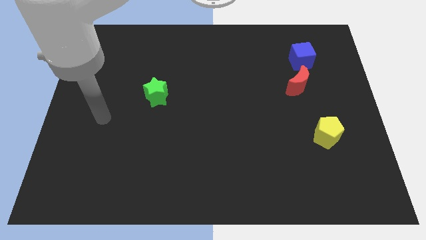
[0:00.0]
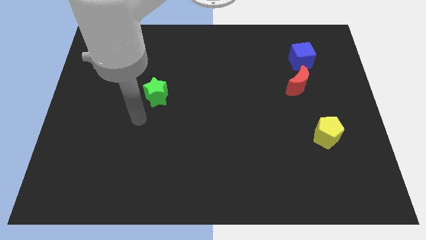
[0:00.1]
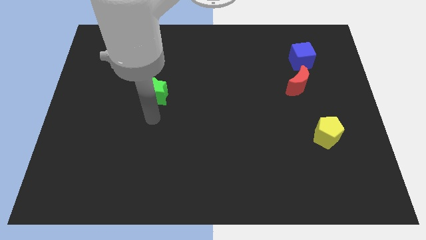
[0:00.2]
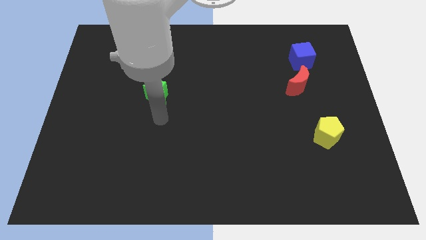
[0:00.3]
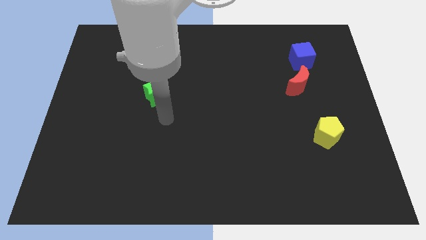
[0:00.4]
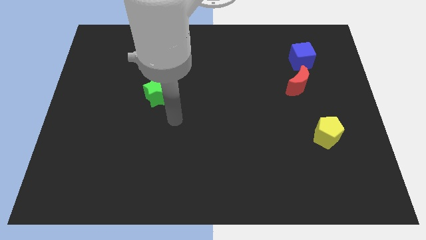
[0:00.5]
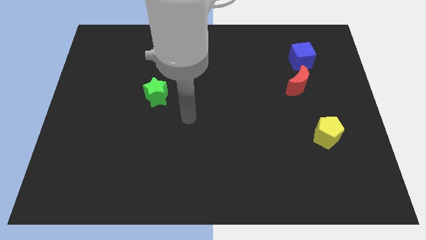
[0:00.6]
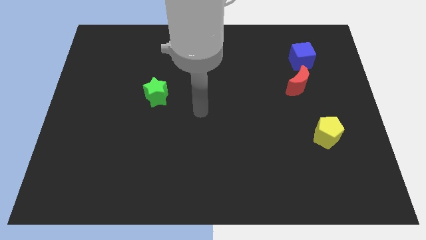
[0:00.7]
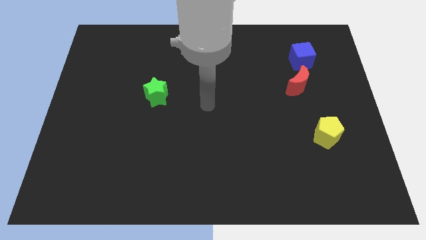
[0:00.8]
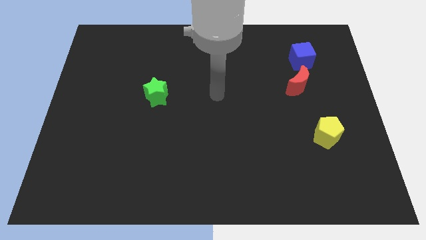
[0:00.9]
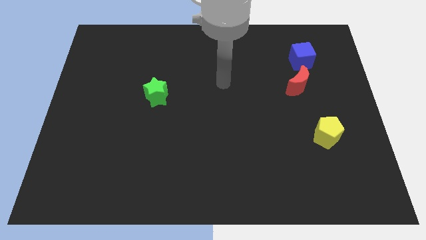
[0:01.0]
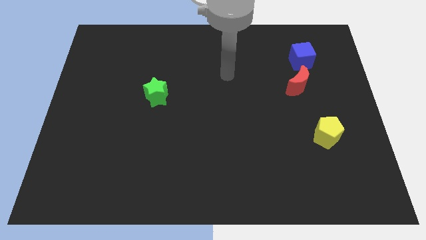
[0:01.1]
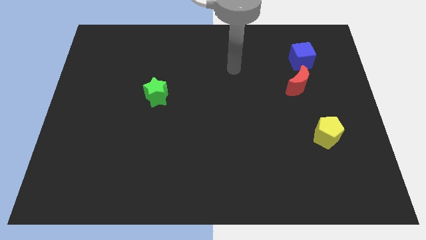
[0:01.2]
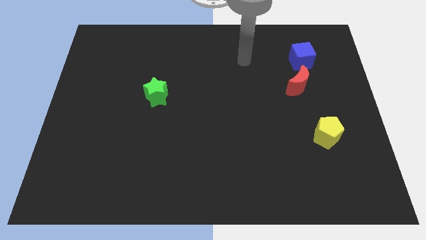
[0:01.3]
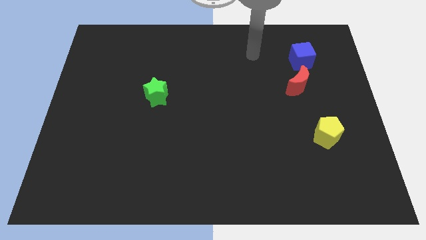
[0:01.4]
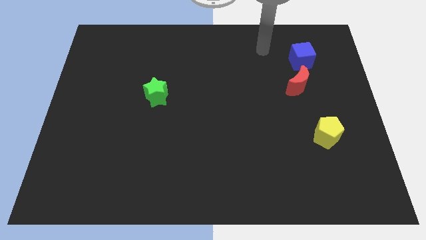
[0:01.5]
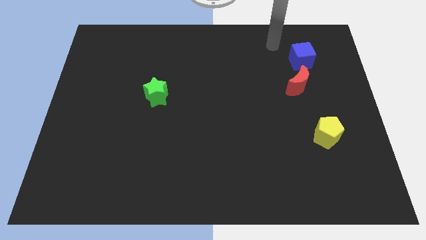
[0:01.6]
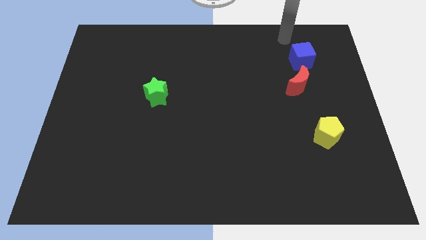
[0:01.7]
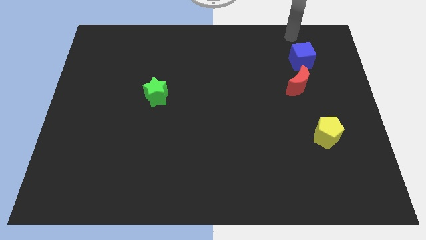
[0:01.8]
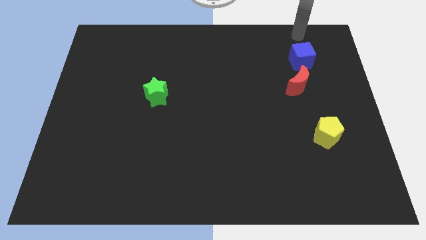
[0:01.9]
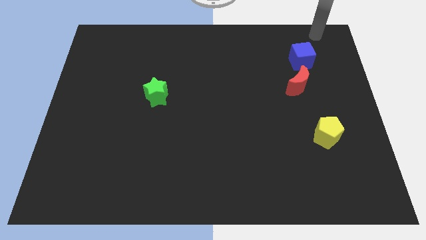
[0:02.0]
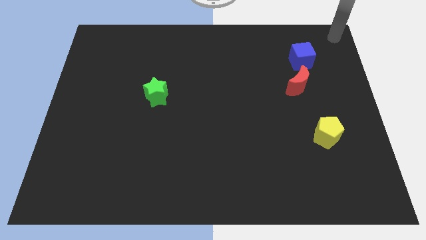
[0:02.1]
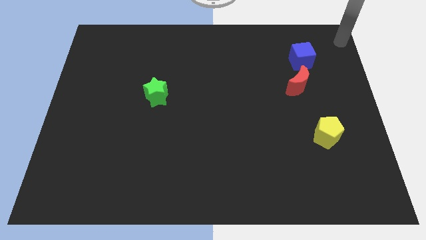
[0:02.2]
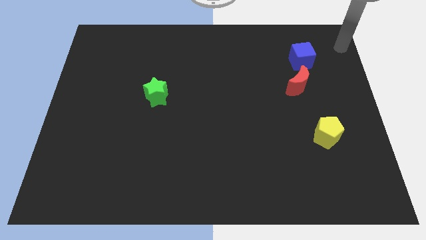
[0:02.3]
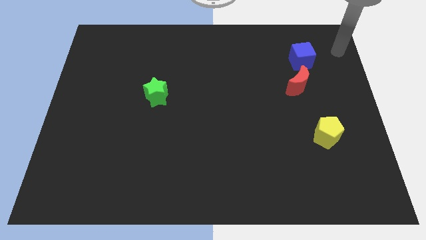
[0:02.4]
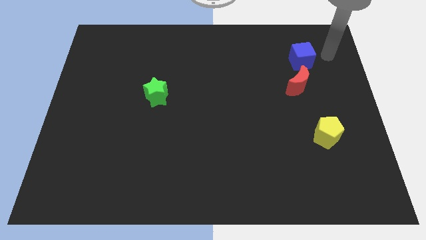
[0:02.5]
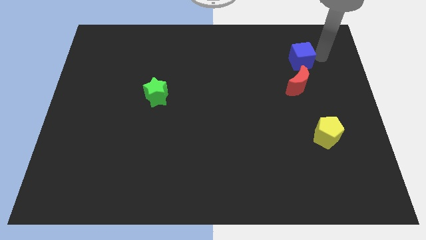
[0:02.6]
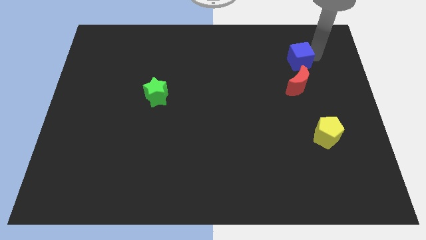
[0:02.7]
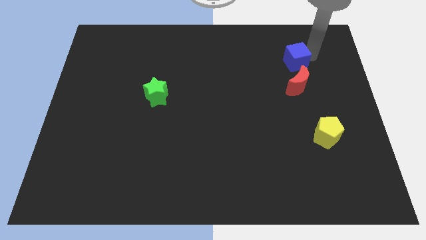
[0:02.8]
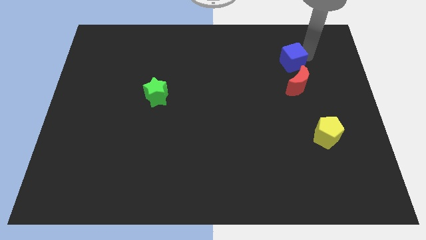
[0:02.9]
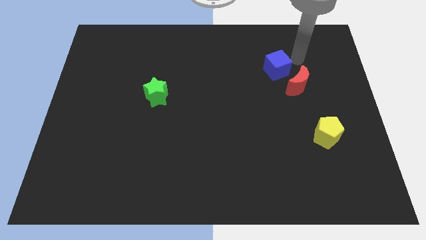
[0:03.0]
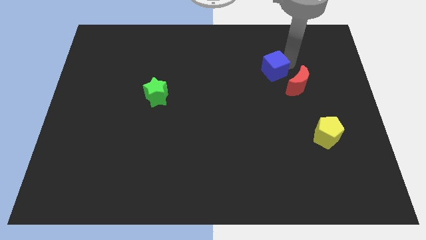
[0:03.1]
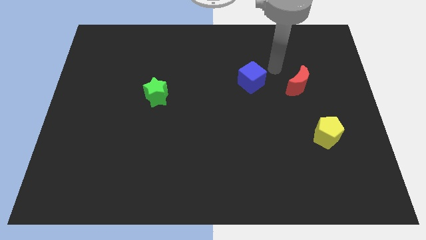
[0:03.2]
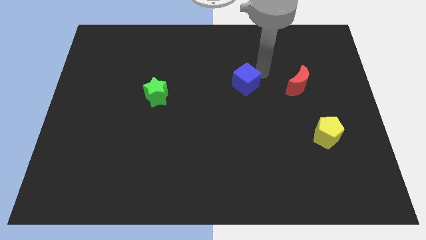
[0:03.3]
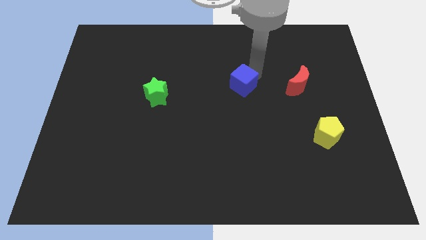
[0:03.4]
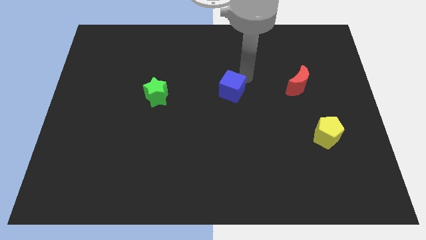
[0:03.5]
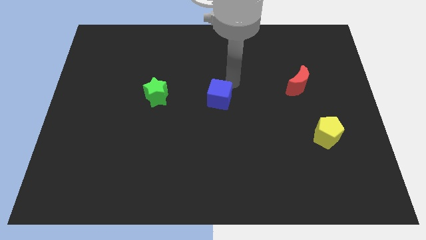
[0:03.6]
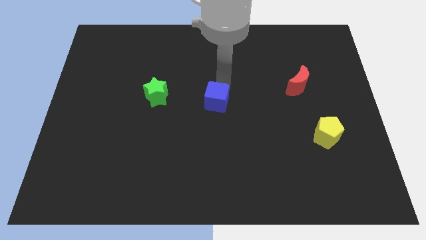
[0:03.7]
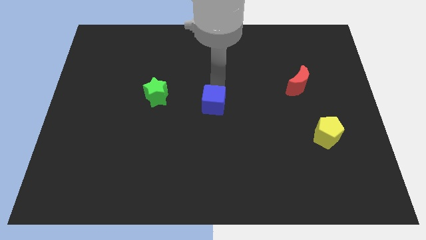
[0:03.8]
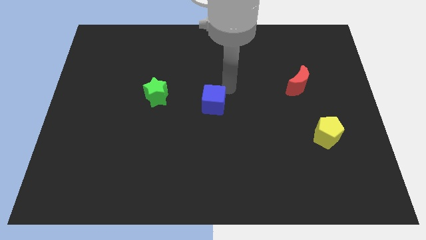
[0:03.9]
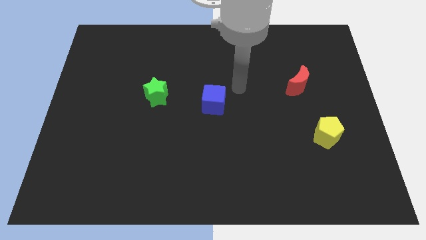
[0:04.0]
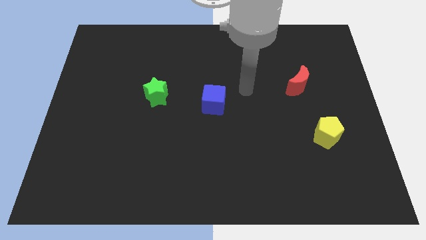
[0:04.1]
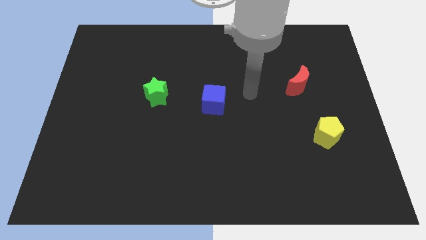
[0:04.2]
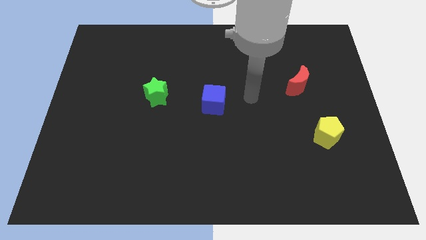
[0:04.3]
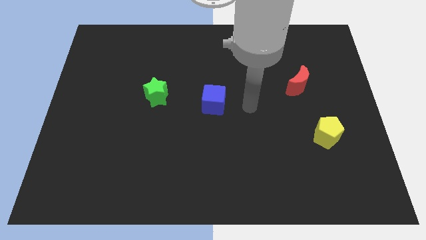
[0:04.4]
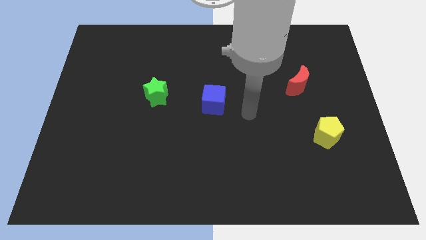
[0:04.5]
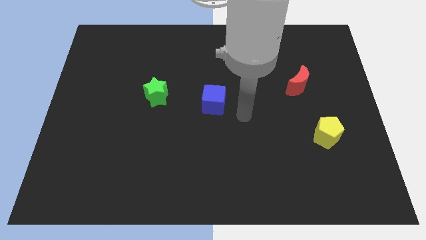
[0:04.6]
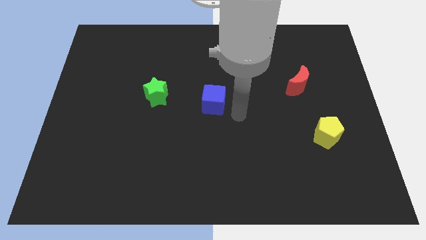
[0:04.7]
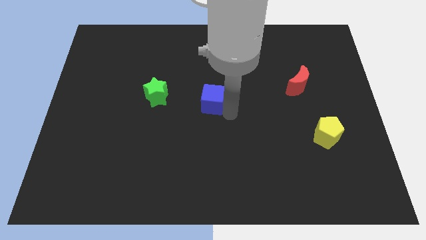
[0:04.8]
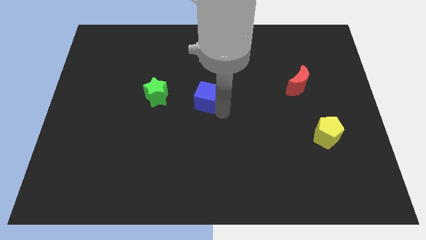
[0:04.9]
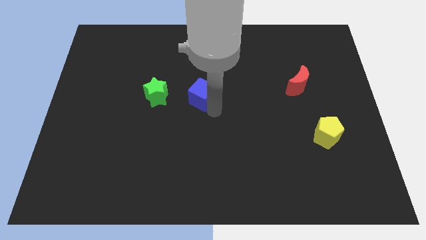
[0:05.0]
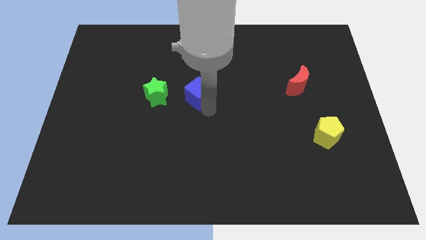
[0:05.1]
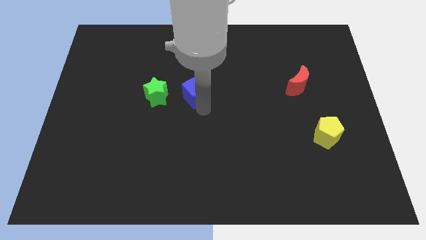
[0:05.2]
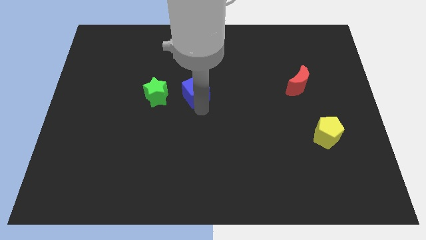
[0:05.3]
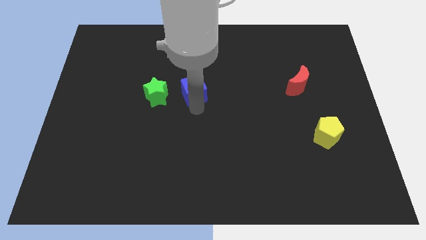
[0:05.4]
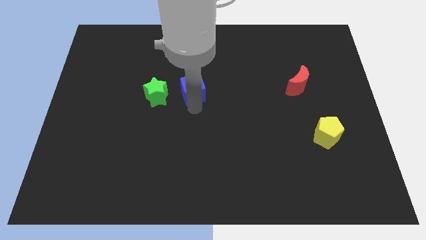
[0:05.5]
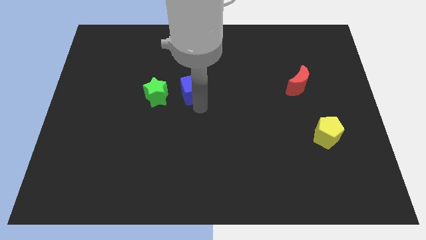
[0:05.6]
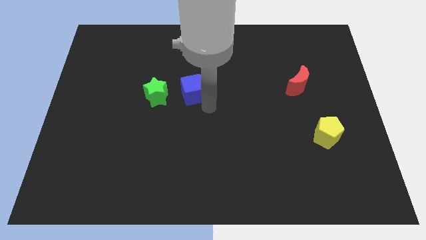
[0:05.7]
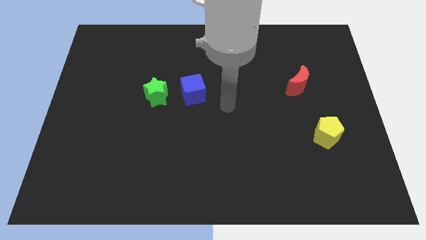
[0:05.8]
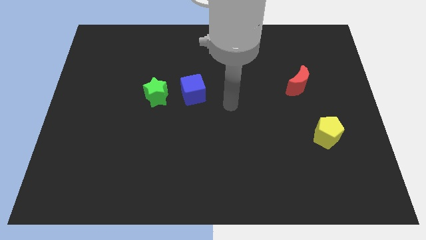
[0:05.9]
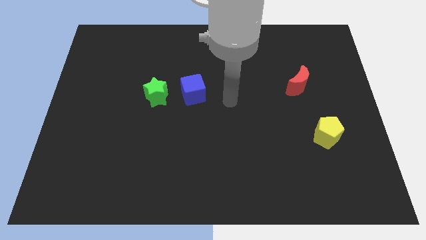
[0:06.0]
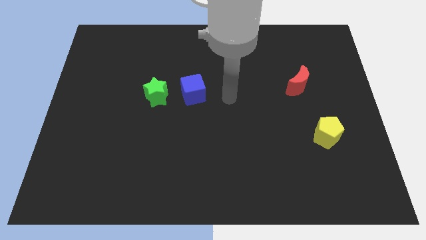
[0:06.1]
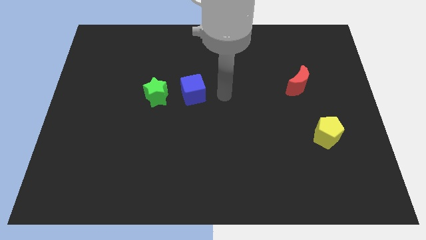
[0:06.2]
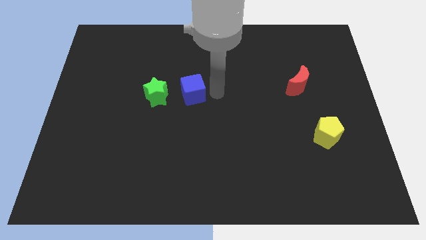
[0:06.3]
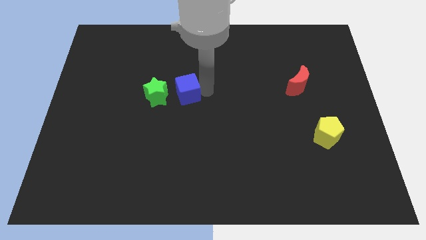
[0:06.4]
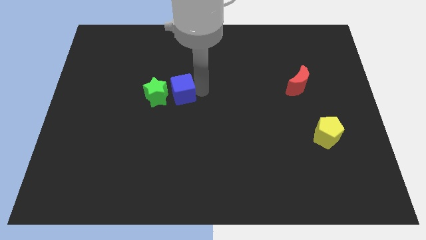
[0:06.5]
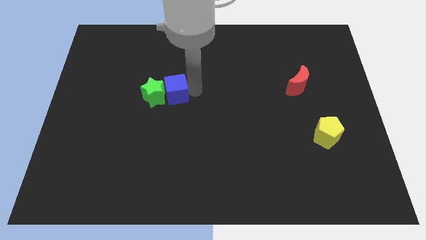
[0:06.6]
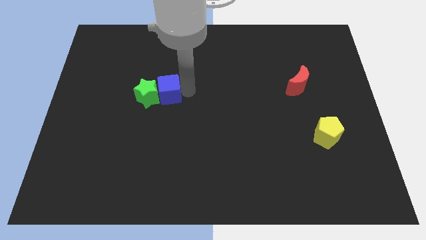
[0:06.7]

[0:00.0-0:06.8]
put the cube to the star

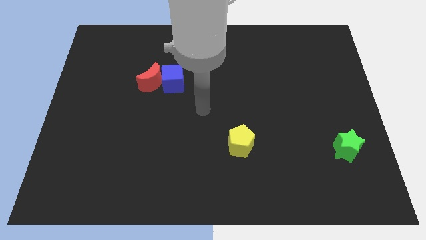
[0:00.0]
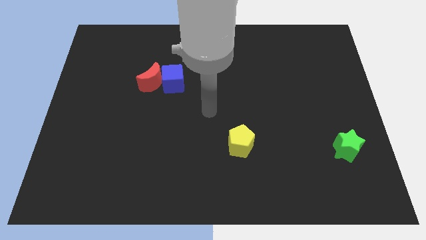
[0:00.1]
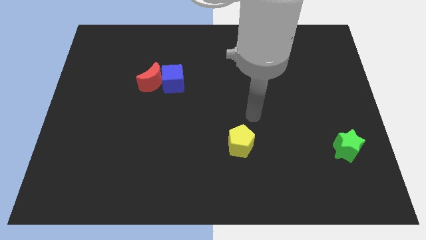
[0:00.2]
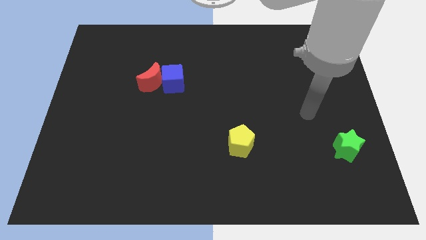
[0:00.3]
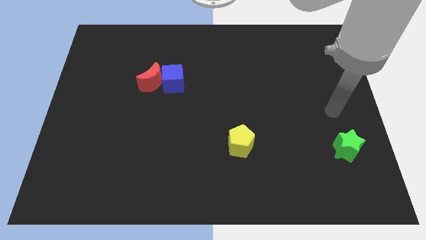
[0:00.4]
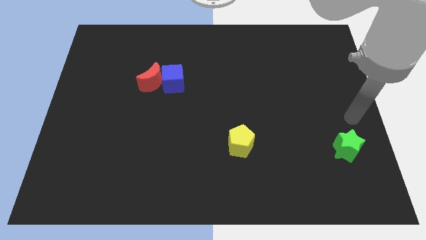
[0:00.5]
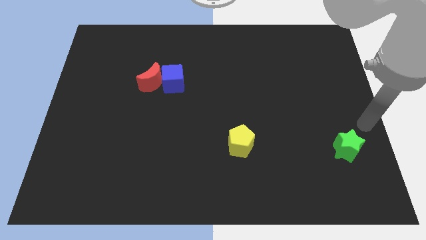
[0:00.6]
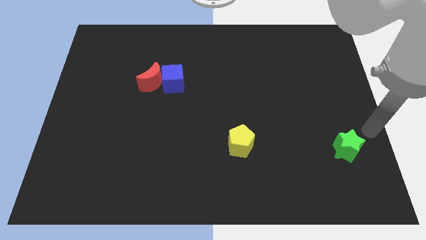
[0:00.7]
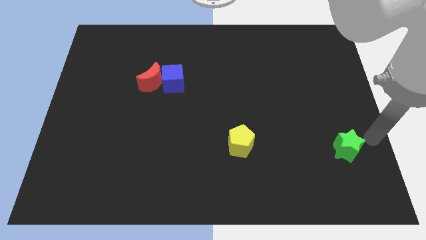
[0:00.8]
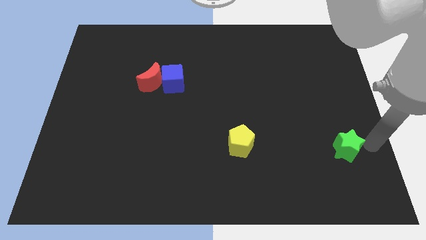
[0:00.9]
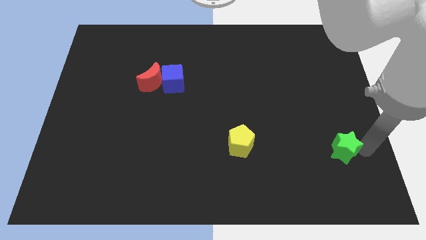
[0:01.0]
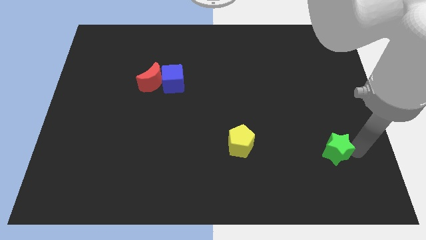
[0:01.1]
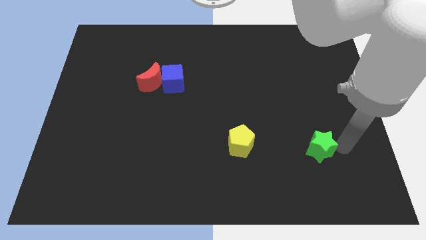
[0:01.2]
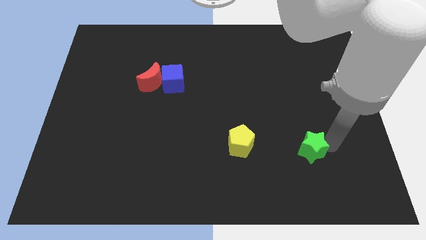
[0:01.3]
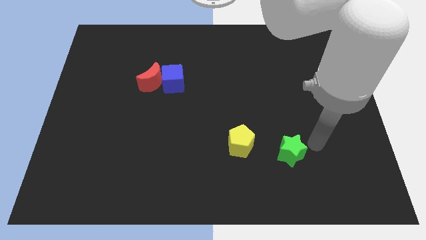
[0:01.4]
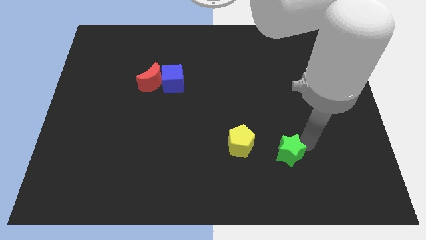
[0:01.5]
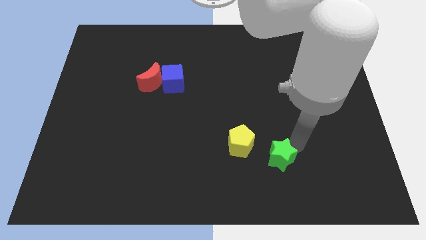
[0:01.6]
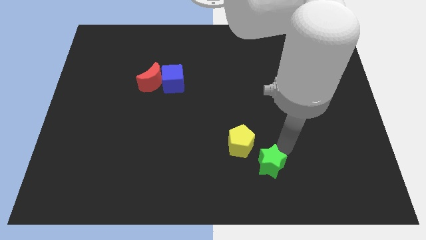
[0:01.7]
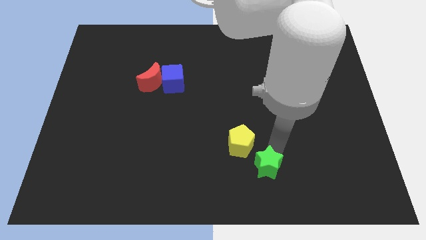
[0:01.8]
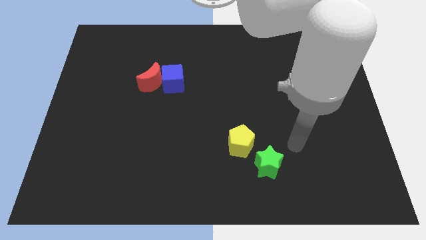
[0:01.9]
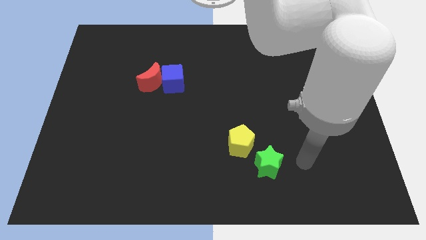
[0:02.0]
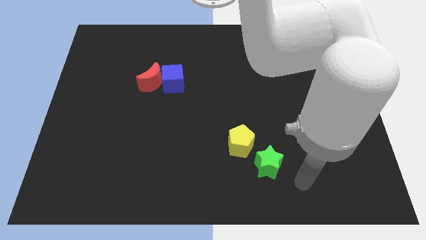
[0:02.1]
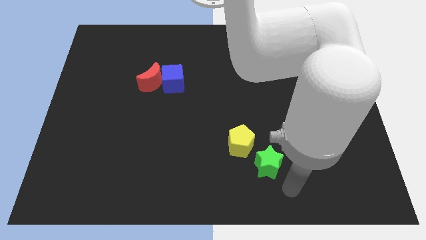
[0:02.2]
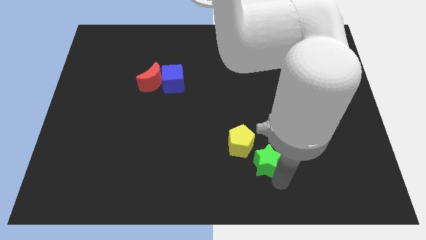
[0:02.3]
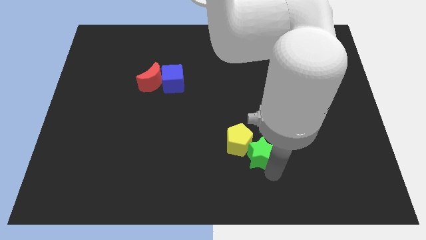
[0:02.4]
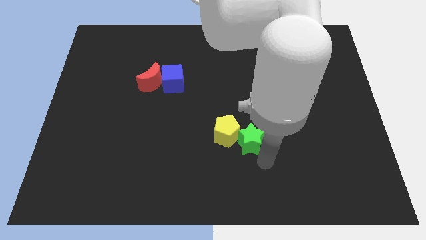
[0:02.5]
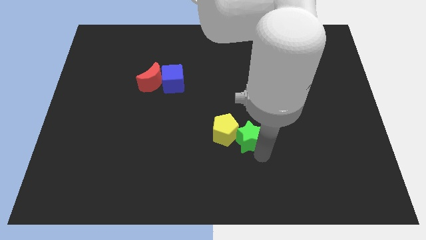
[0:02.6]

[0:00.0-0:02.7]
move the green star next to the pentagon
